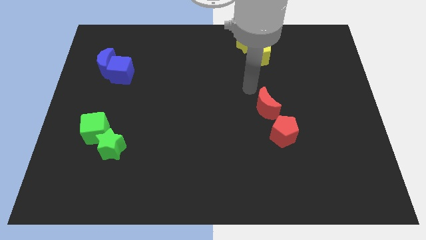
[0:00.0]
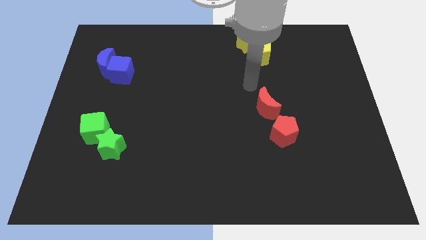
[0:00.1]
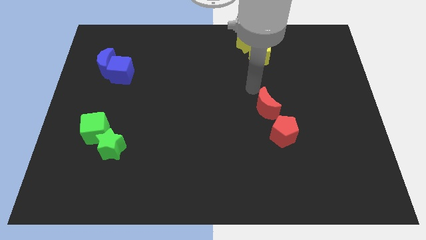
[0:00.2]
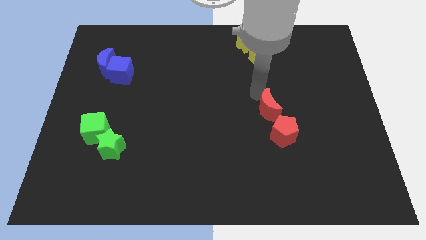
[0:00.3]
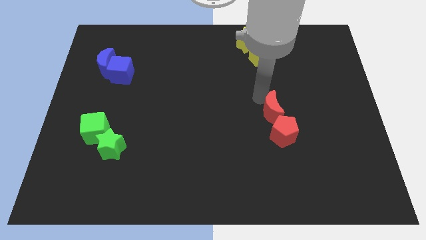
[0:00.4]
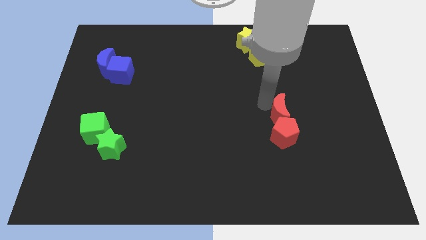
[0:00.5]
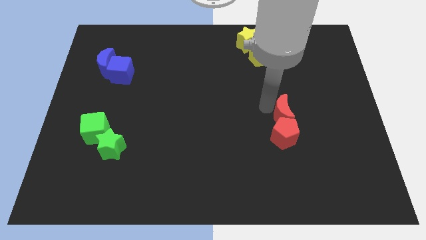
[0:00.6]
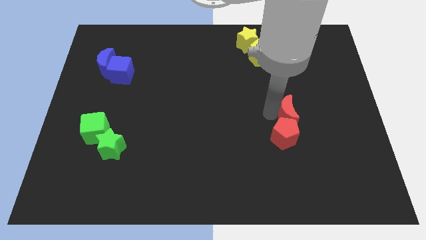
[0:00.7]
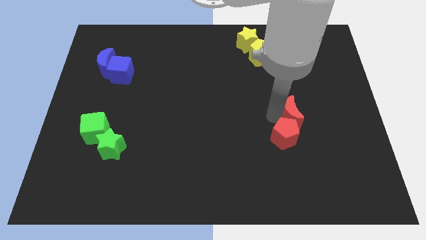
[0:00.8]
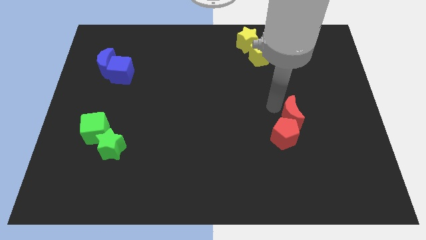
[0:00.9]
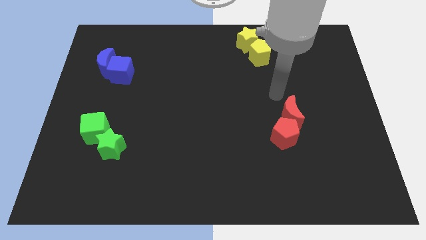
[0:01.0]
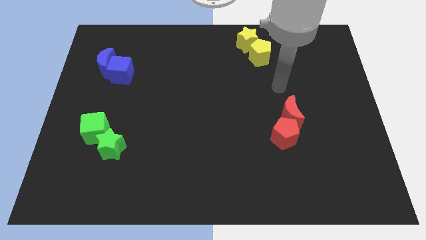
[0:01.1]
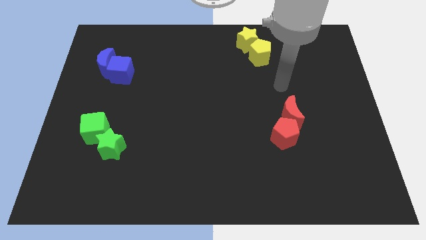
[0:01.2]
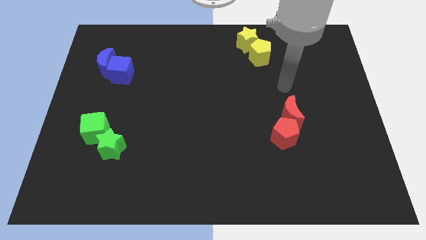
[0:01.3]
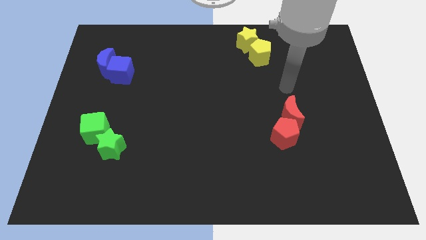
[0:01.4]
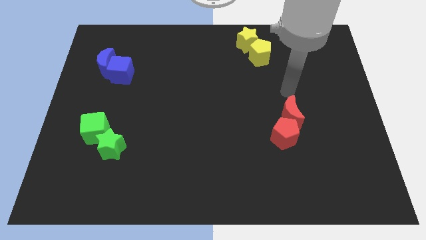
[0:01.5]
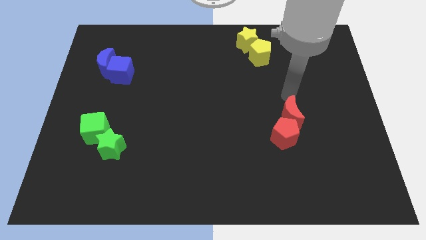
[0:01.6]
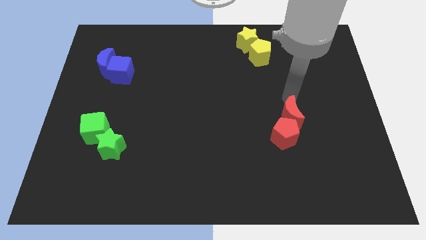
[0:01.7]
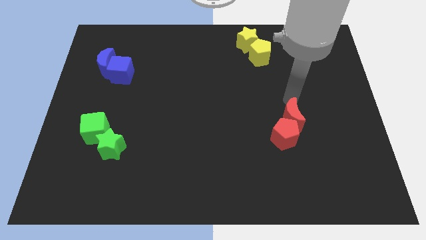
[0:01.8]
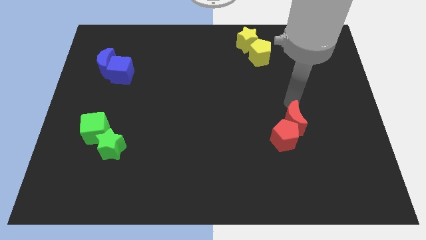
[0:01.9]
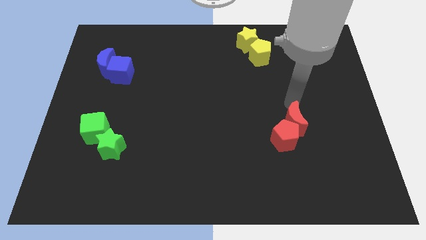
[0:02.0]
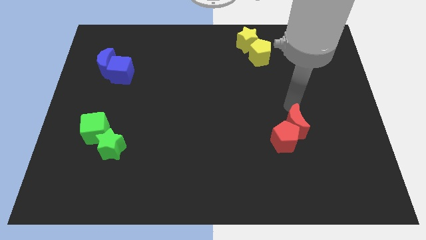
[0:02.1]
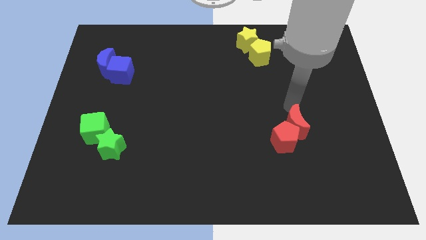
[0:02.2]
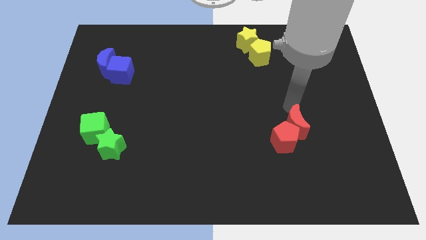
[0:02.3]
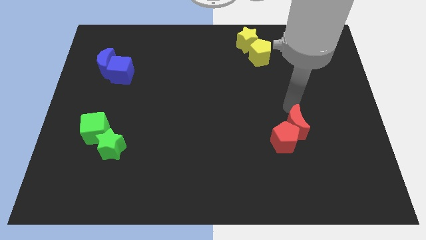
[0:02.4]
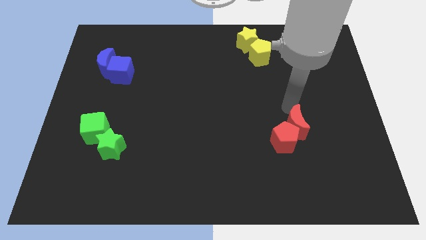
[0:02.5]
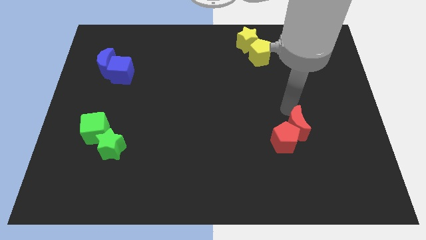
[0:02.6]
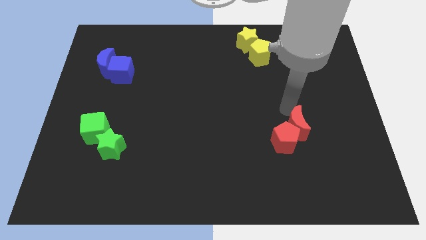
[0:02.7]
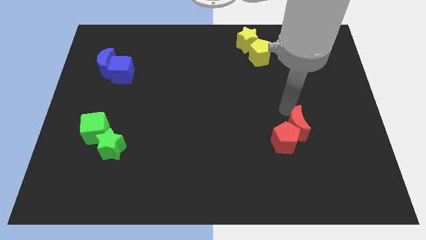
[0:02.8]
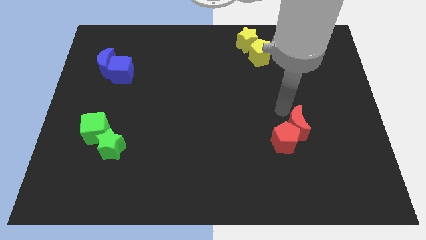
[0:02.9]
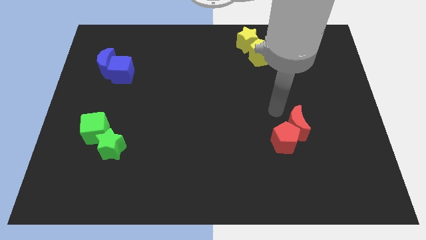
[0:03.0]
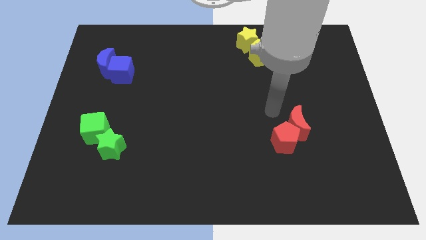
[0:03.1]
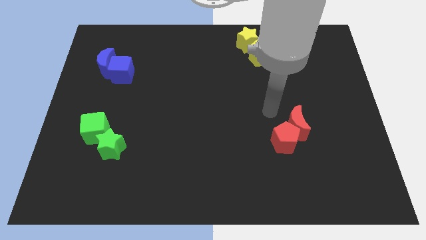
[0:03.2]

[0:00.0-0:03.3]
move the red crescent to the right of the red pentagon

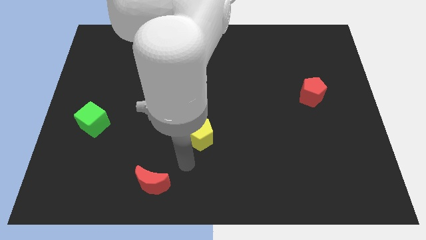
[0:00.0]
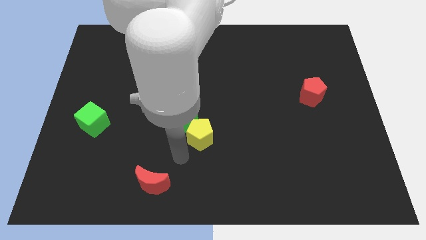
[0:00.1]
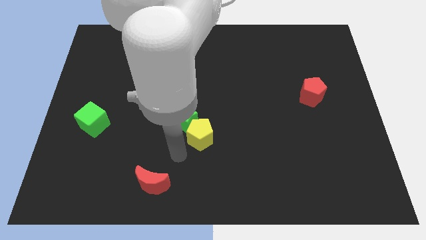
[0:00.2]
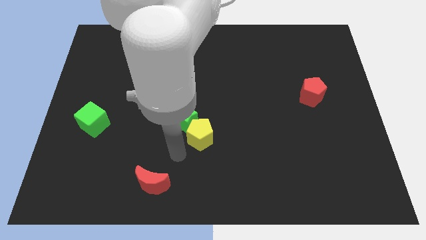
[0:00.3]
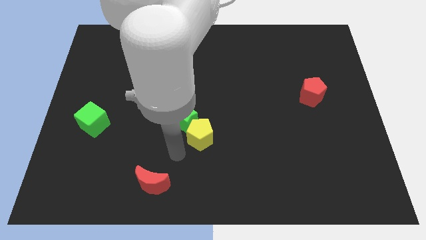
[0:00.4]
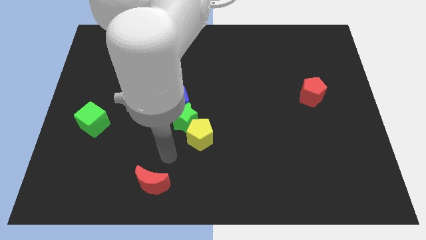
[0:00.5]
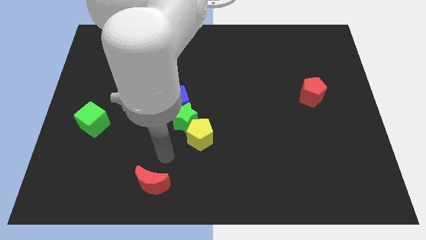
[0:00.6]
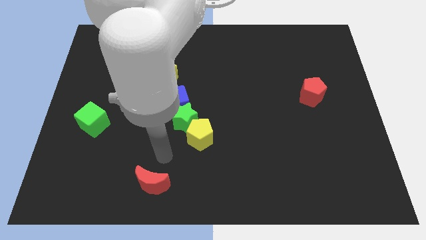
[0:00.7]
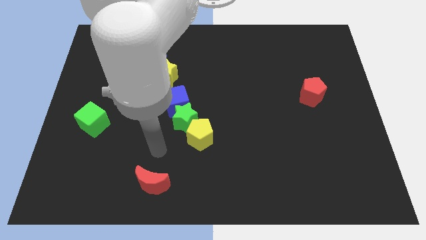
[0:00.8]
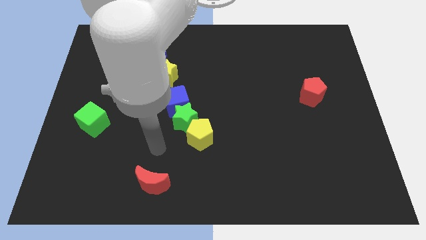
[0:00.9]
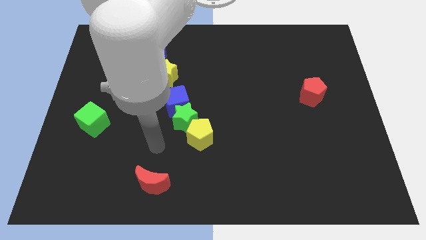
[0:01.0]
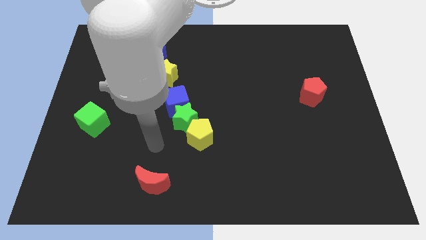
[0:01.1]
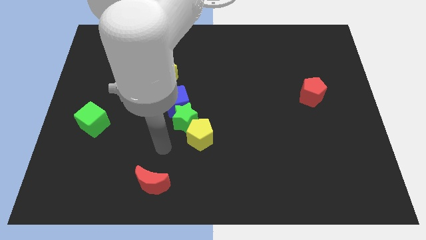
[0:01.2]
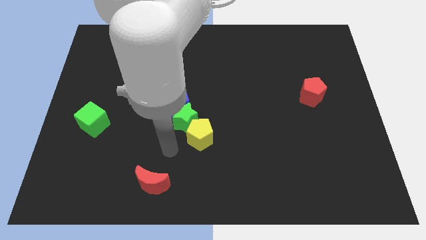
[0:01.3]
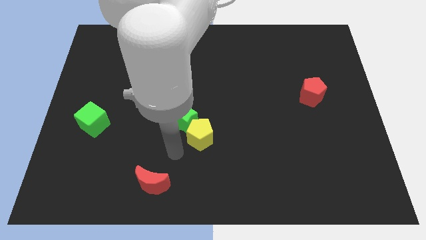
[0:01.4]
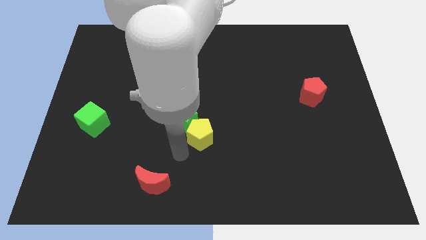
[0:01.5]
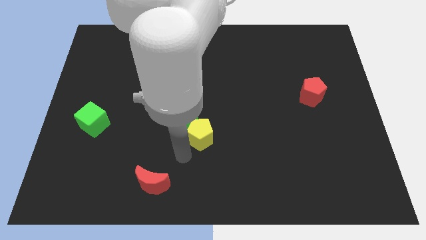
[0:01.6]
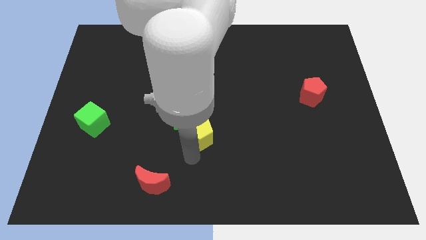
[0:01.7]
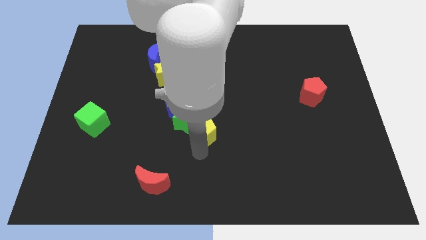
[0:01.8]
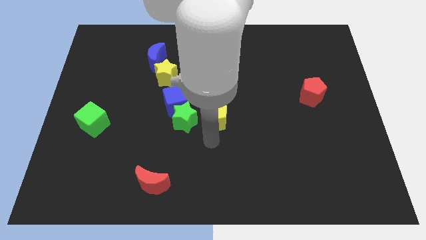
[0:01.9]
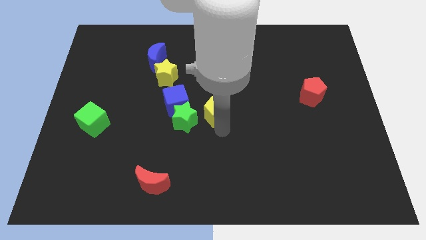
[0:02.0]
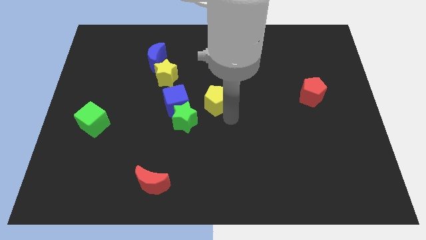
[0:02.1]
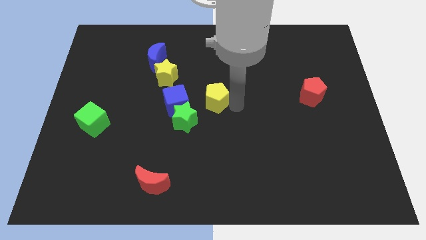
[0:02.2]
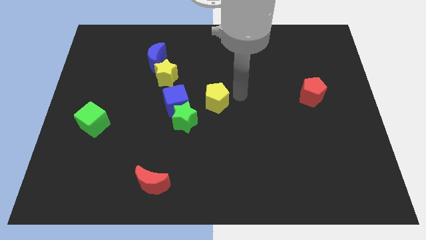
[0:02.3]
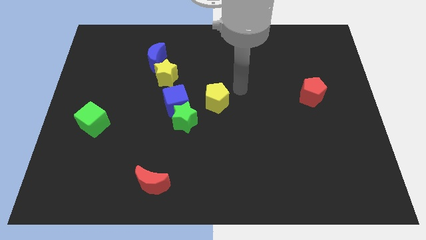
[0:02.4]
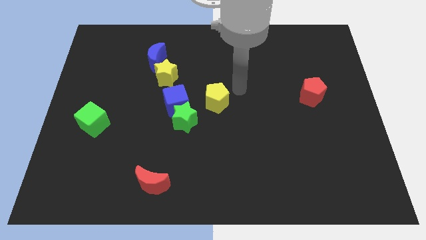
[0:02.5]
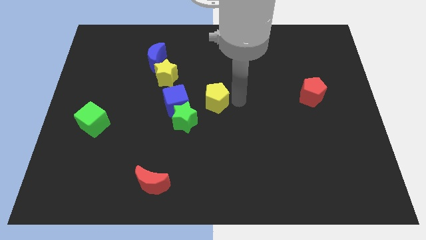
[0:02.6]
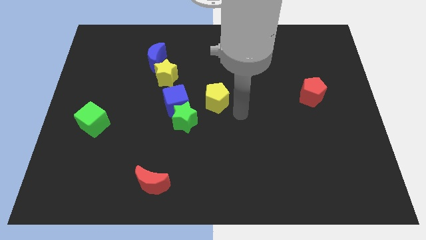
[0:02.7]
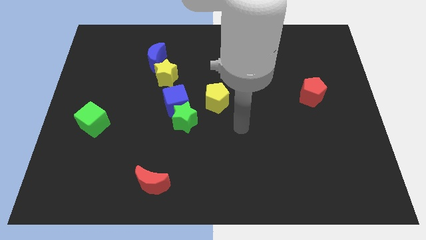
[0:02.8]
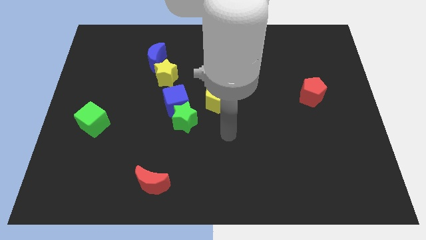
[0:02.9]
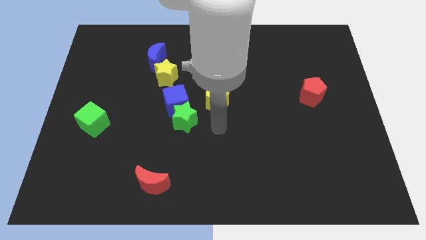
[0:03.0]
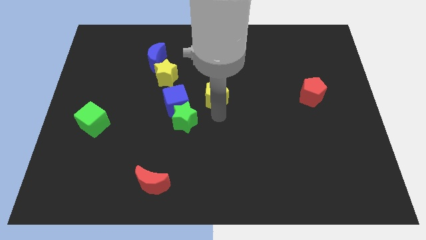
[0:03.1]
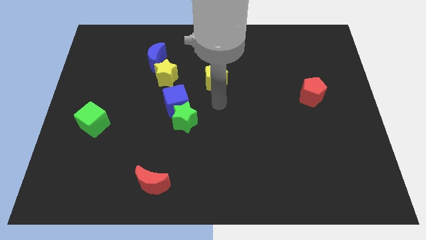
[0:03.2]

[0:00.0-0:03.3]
push the yellow pentagon to the right of the blue cube

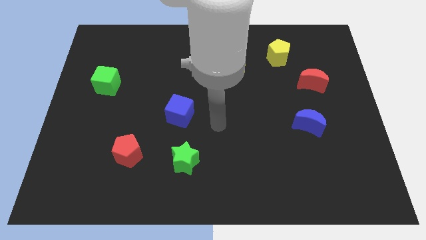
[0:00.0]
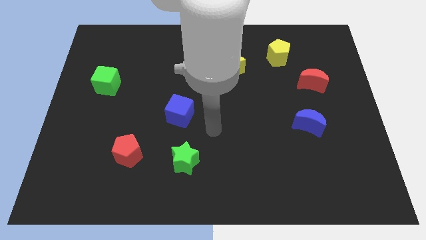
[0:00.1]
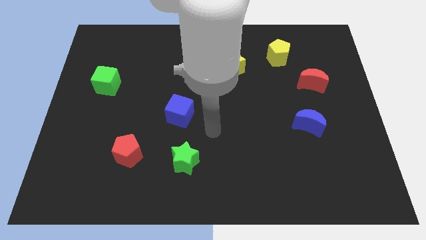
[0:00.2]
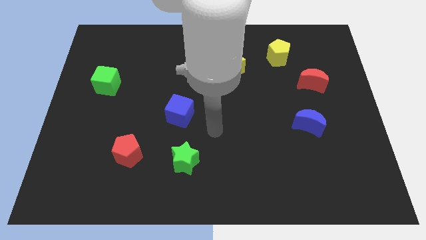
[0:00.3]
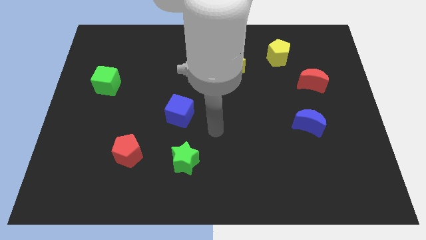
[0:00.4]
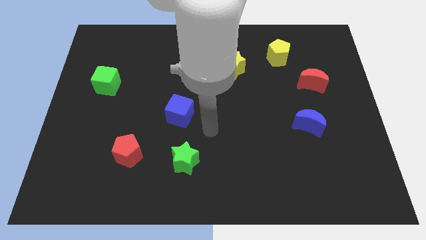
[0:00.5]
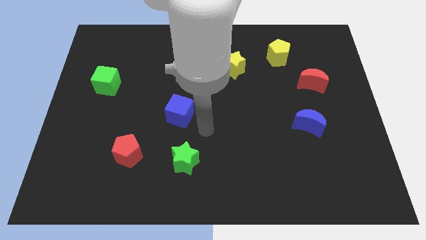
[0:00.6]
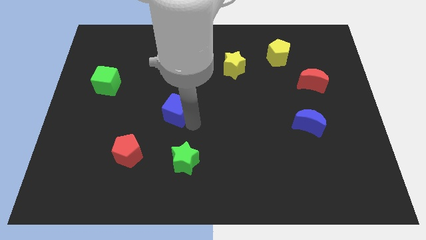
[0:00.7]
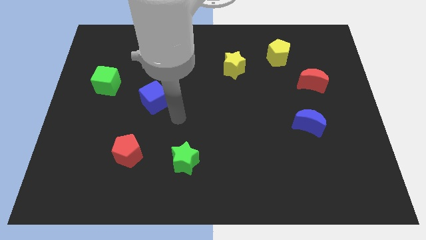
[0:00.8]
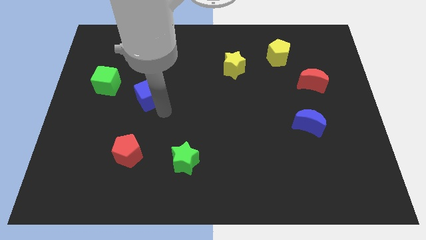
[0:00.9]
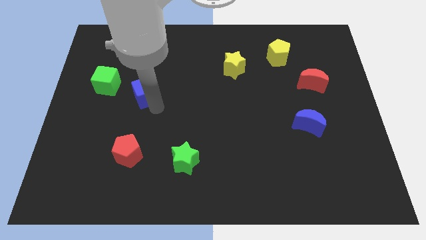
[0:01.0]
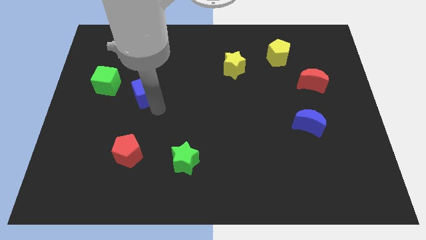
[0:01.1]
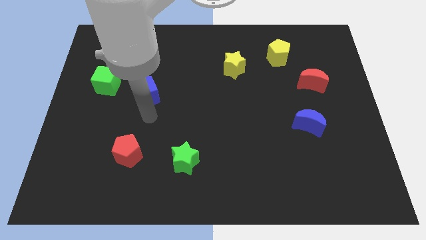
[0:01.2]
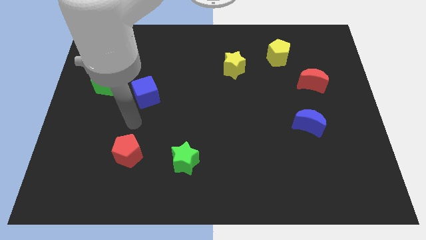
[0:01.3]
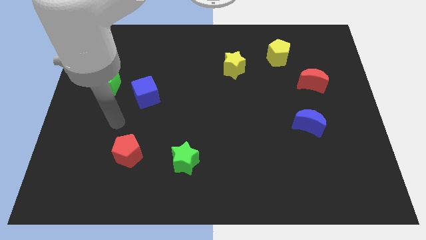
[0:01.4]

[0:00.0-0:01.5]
push the blue cube towards the green cube

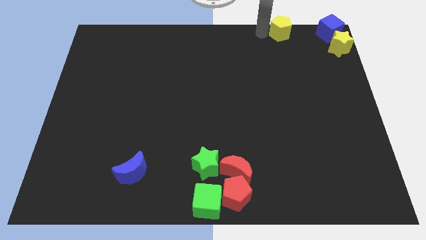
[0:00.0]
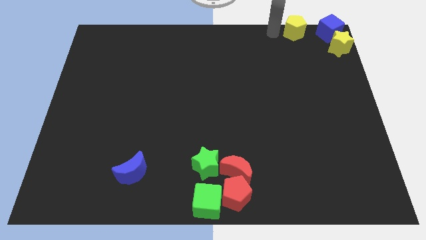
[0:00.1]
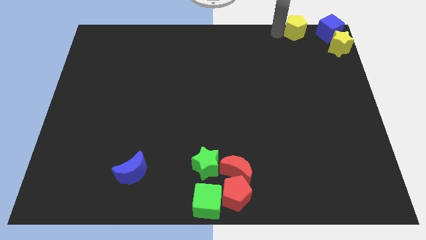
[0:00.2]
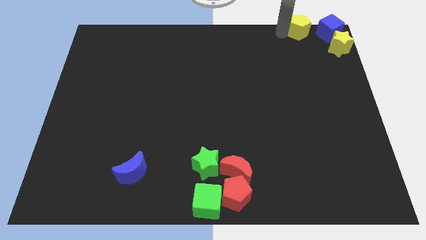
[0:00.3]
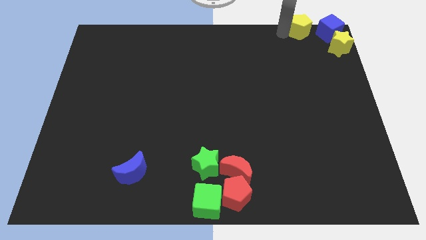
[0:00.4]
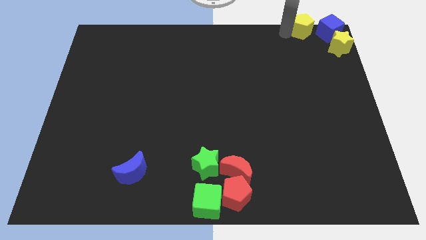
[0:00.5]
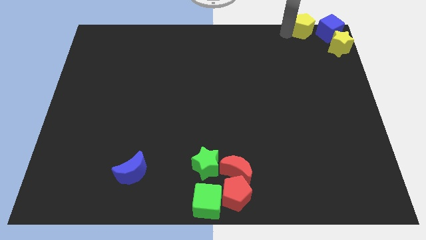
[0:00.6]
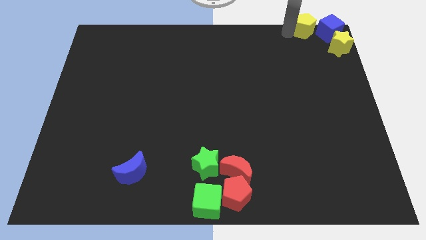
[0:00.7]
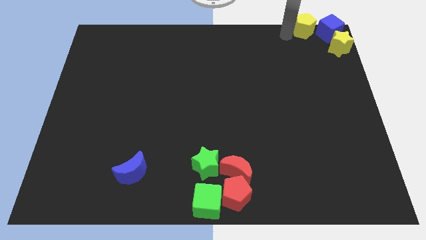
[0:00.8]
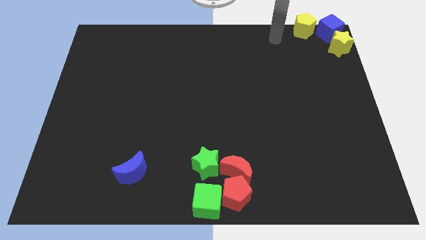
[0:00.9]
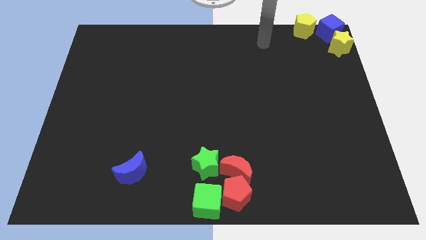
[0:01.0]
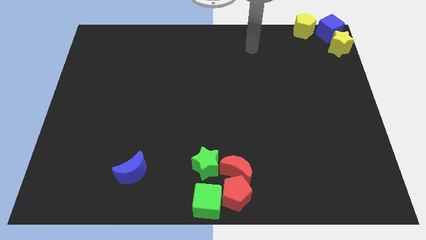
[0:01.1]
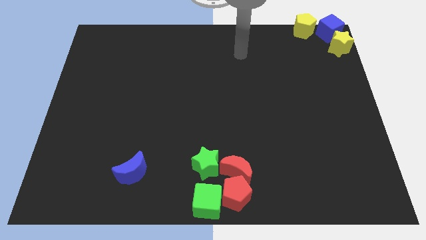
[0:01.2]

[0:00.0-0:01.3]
push yellow pentagon beside blue cube
